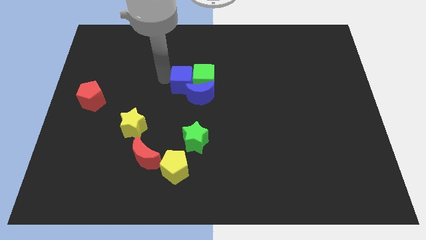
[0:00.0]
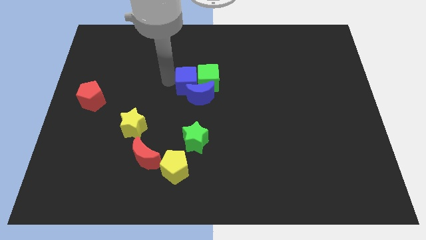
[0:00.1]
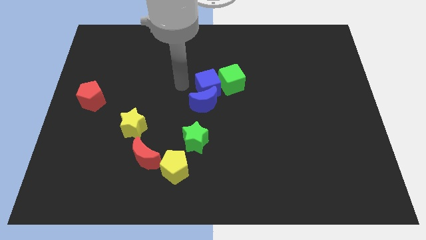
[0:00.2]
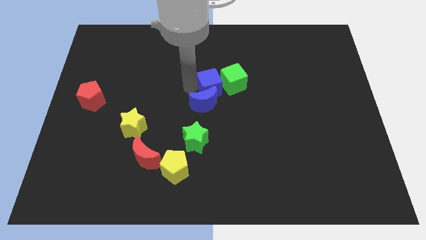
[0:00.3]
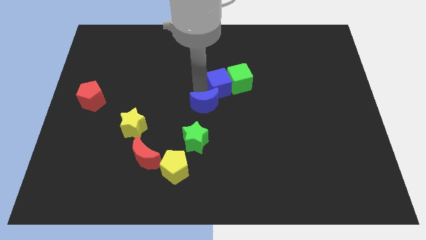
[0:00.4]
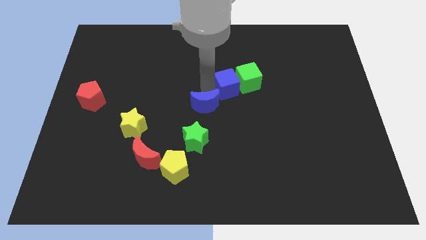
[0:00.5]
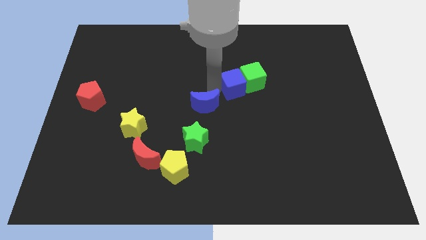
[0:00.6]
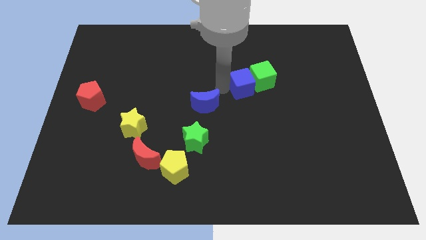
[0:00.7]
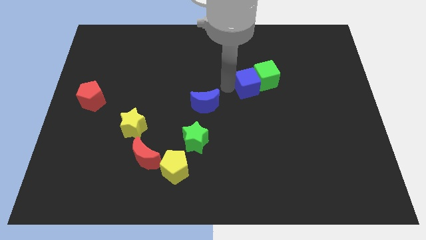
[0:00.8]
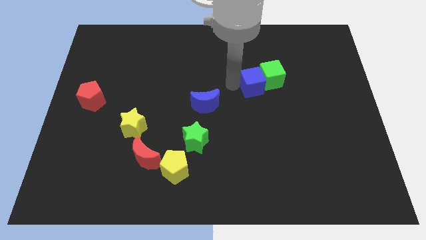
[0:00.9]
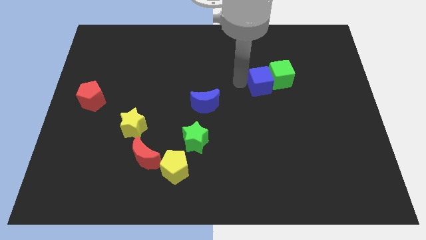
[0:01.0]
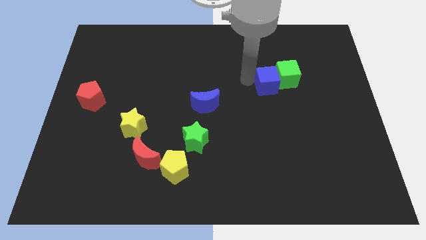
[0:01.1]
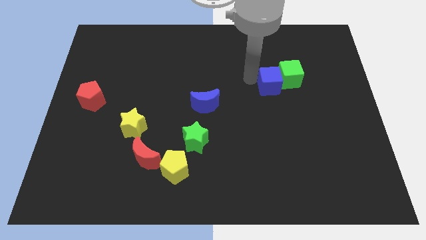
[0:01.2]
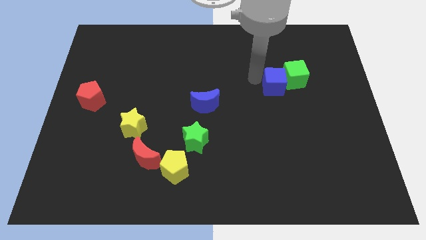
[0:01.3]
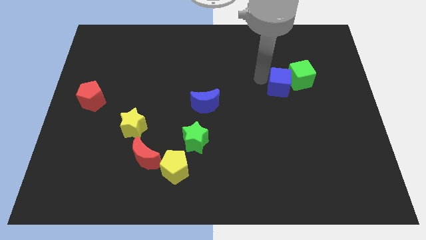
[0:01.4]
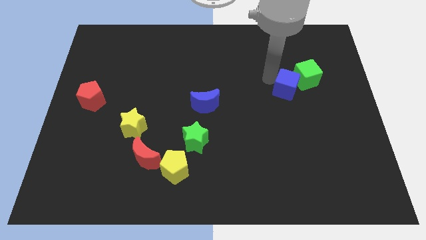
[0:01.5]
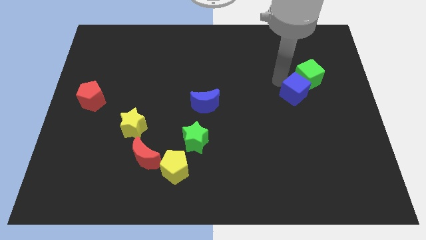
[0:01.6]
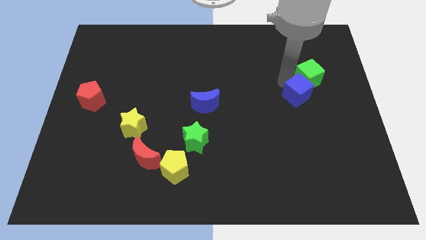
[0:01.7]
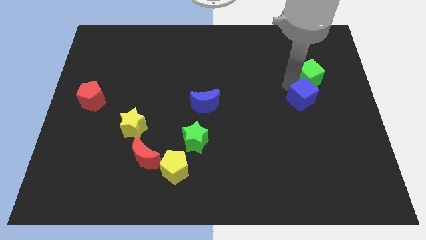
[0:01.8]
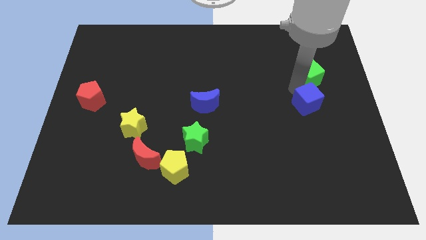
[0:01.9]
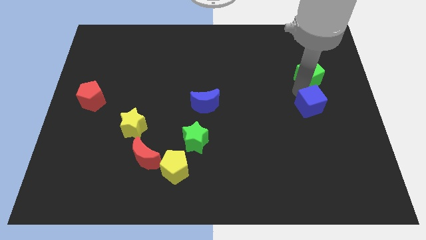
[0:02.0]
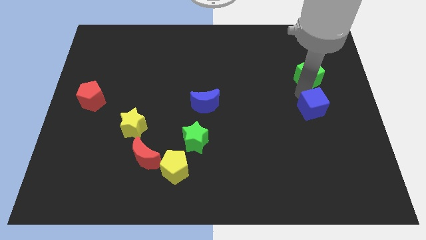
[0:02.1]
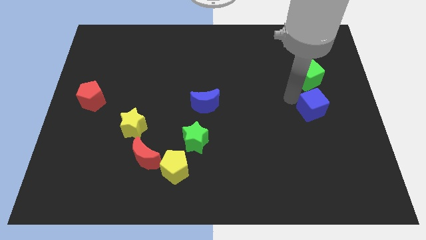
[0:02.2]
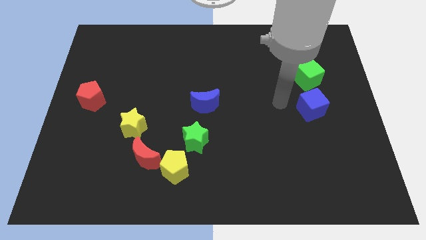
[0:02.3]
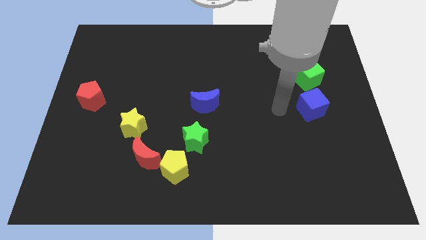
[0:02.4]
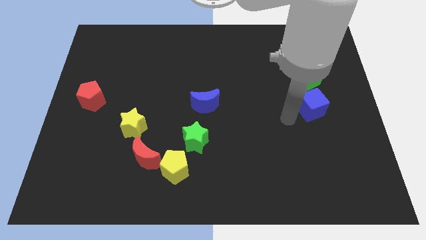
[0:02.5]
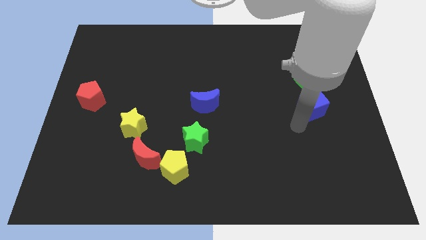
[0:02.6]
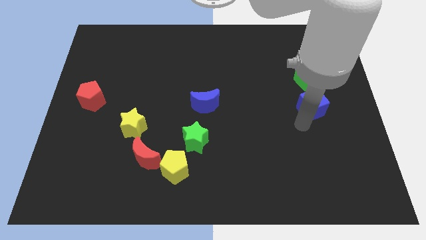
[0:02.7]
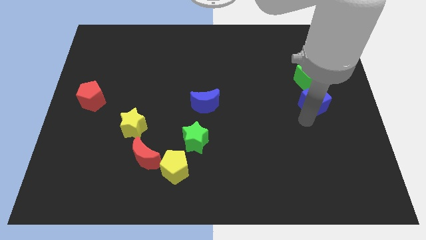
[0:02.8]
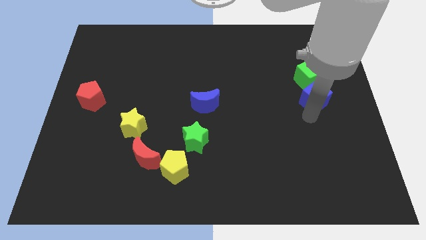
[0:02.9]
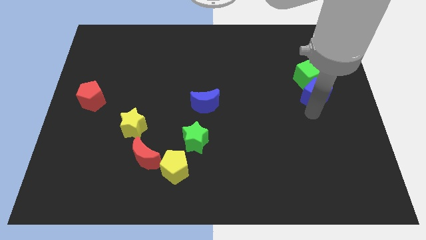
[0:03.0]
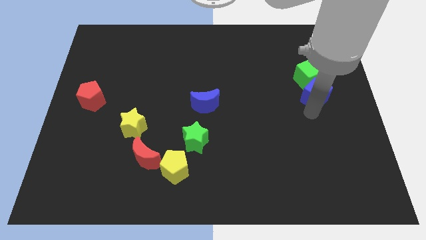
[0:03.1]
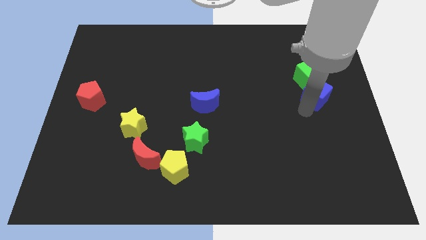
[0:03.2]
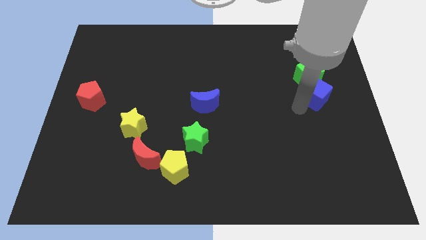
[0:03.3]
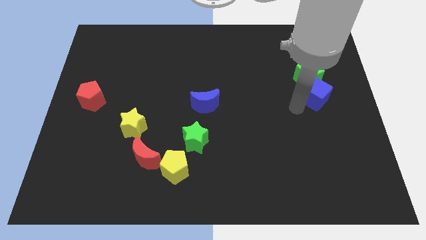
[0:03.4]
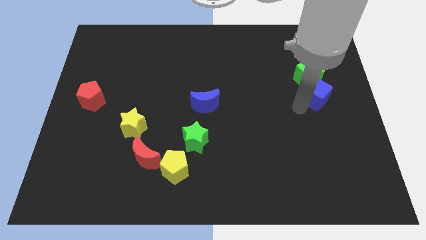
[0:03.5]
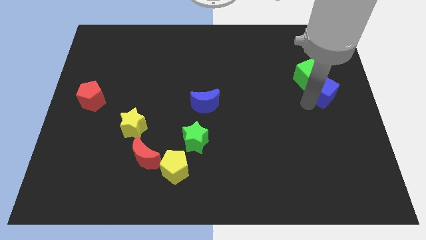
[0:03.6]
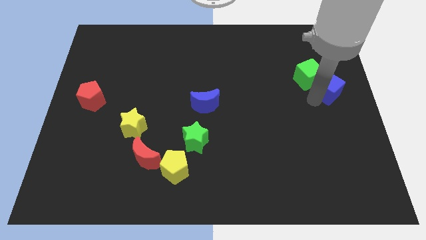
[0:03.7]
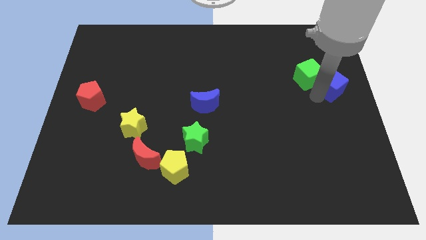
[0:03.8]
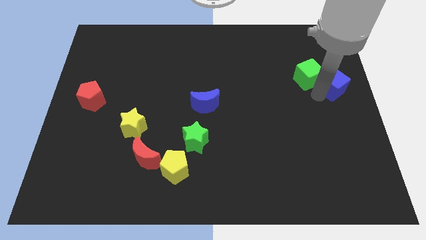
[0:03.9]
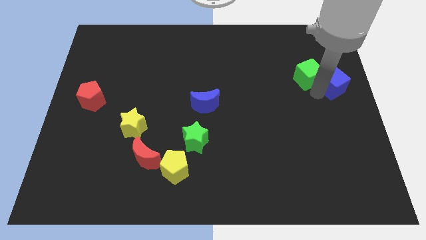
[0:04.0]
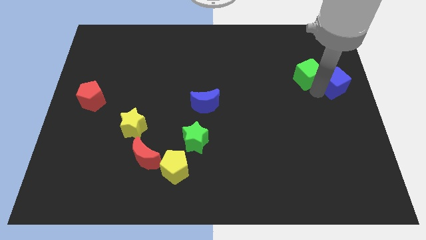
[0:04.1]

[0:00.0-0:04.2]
push blue cube and the green cube towards the top right

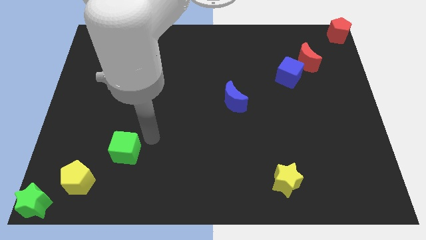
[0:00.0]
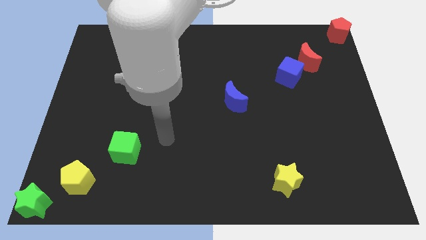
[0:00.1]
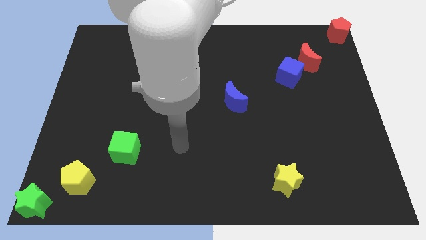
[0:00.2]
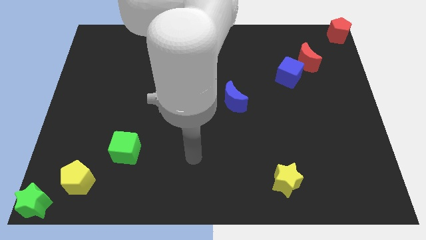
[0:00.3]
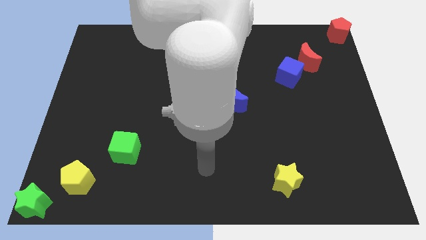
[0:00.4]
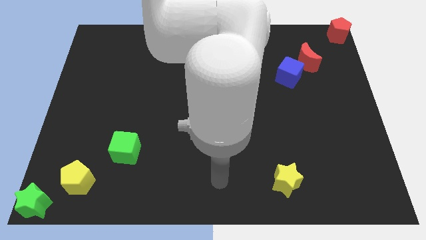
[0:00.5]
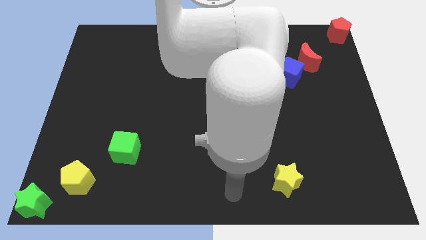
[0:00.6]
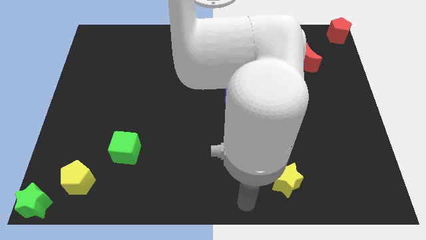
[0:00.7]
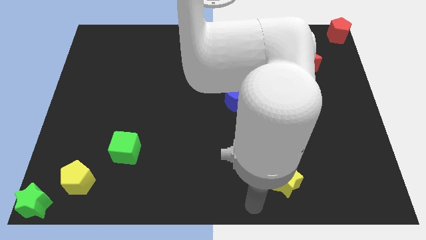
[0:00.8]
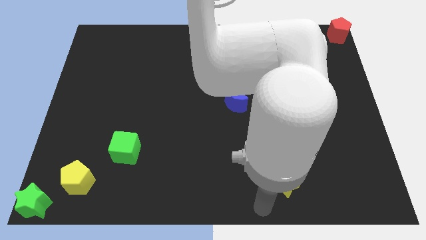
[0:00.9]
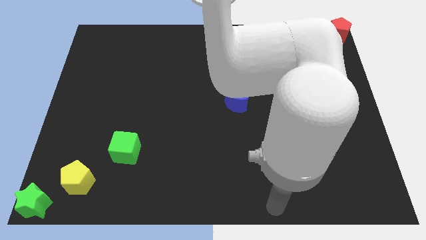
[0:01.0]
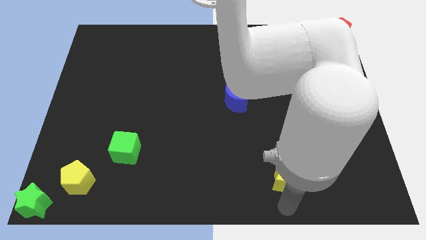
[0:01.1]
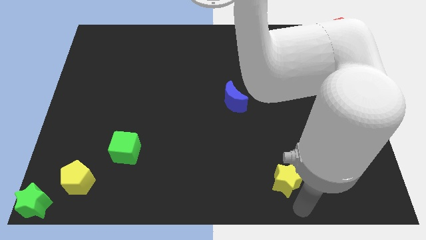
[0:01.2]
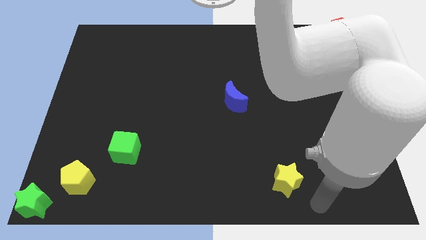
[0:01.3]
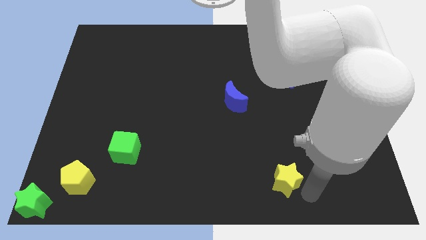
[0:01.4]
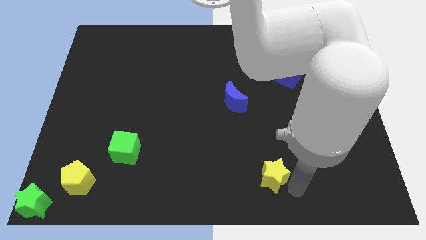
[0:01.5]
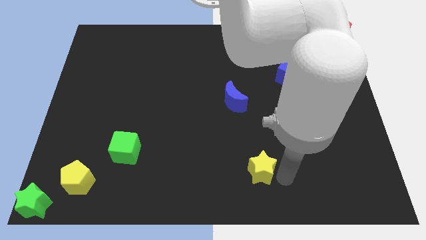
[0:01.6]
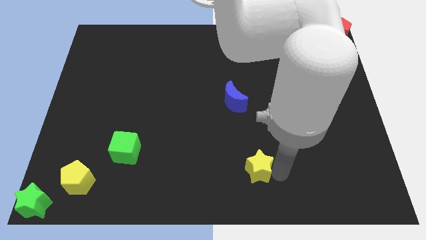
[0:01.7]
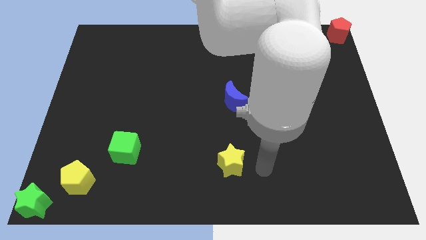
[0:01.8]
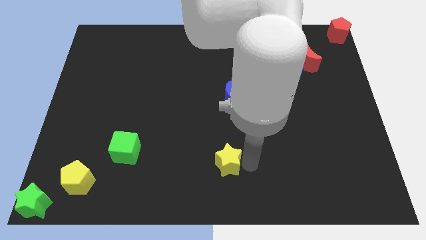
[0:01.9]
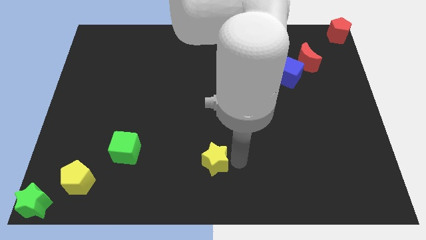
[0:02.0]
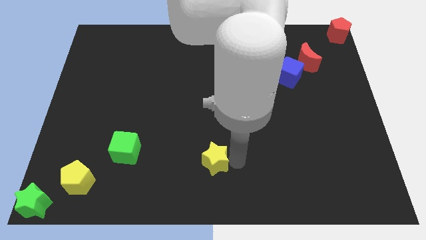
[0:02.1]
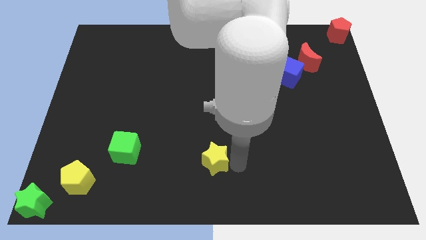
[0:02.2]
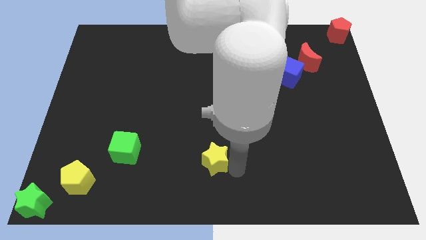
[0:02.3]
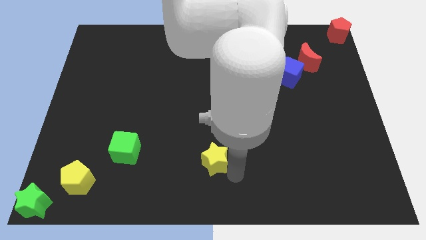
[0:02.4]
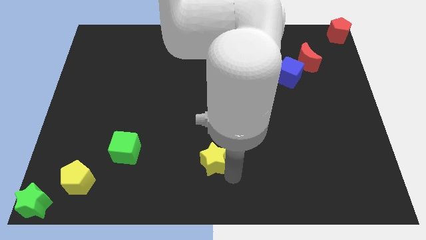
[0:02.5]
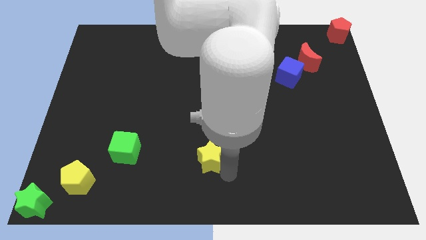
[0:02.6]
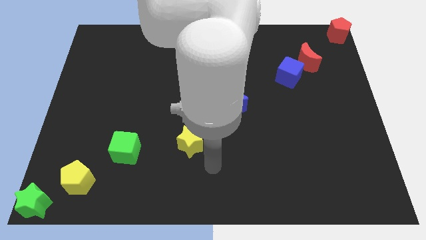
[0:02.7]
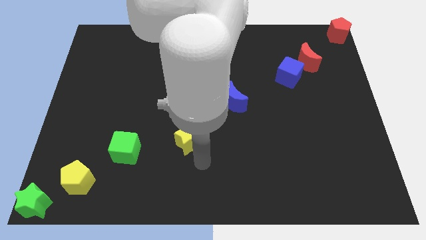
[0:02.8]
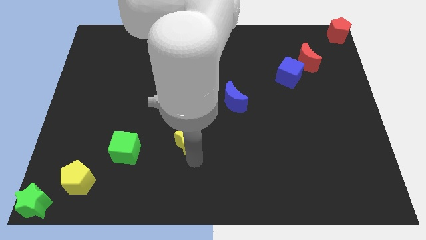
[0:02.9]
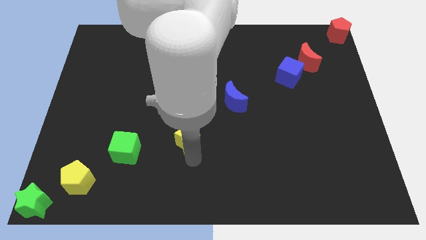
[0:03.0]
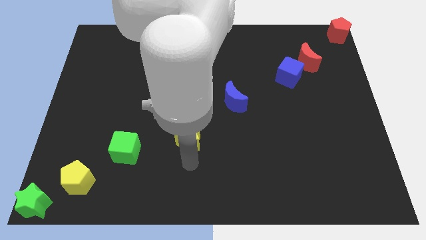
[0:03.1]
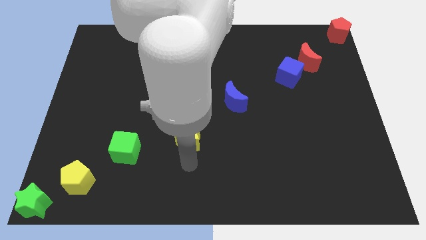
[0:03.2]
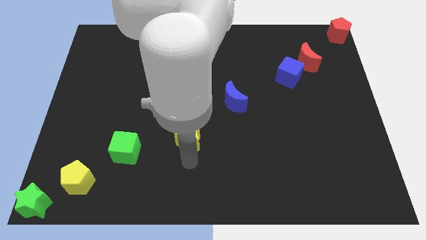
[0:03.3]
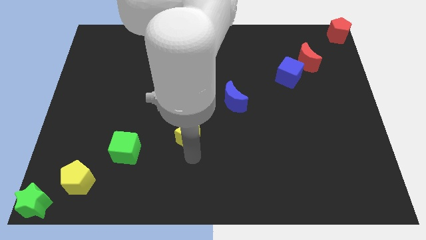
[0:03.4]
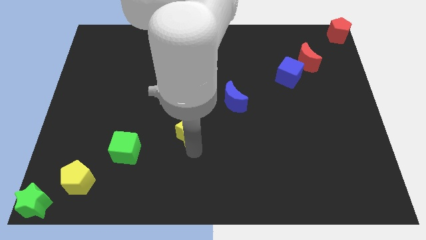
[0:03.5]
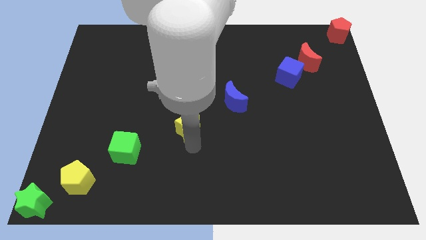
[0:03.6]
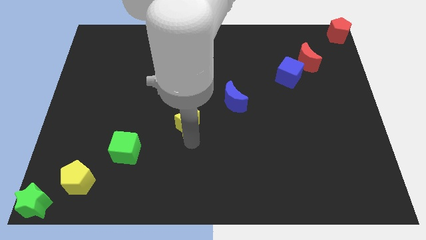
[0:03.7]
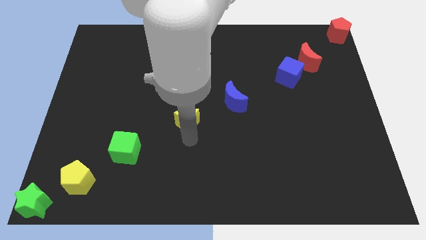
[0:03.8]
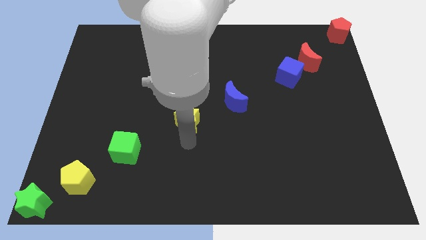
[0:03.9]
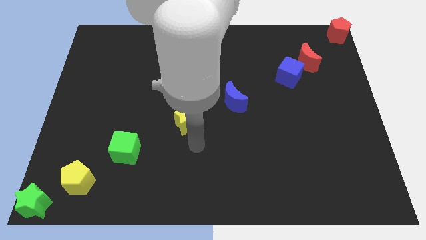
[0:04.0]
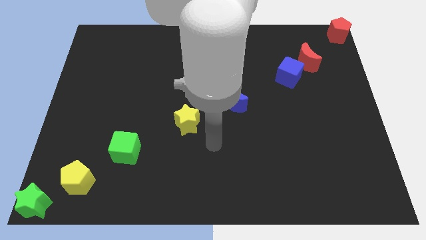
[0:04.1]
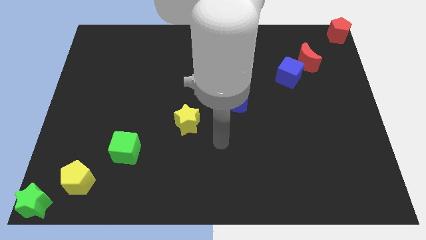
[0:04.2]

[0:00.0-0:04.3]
move the yellow star to the top right of the green cube

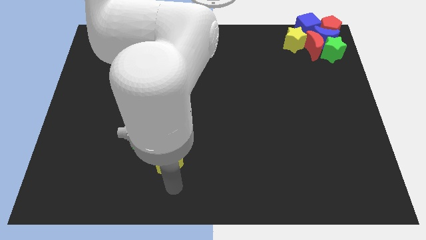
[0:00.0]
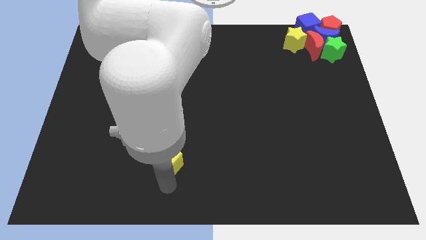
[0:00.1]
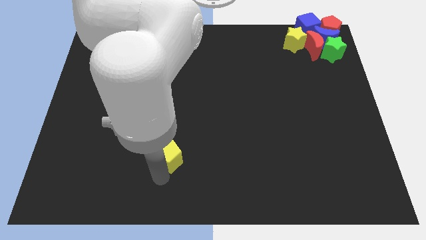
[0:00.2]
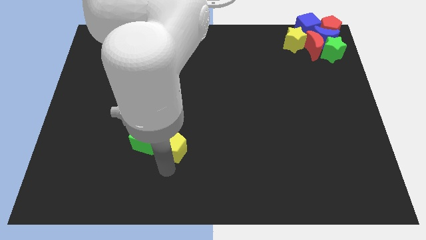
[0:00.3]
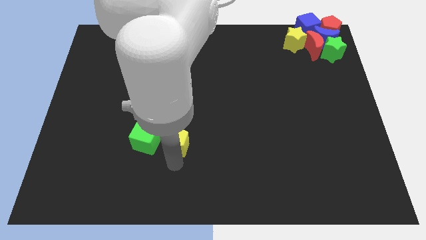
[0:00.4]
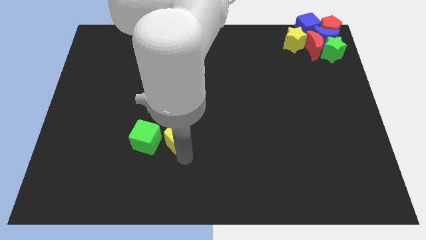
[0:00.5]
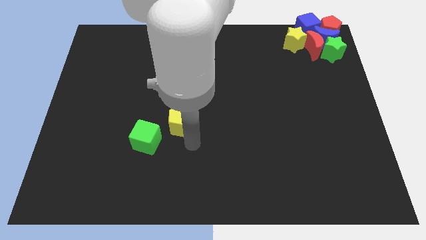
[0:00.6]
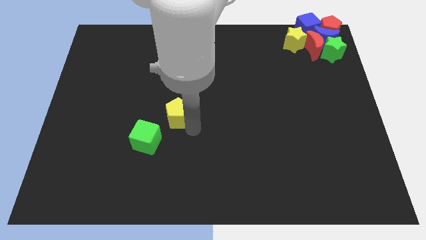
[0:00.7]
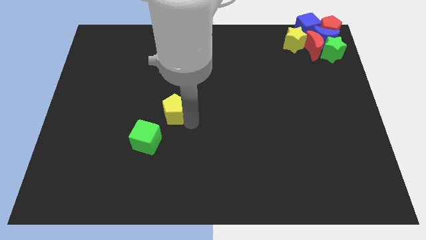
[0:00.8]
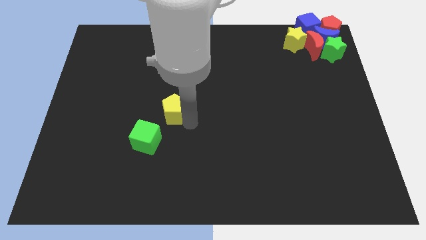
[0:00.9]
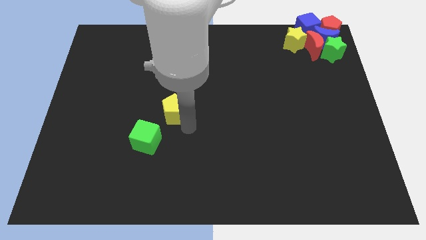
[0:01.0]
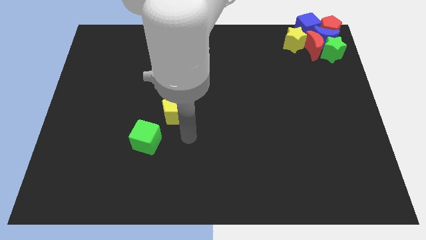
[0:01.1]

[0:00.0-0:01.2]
move the yellow pentagon to the top right of the green cube
